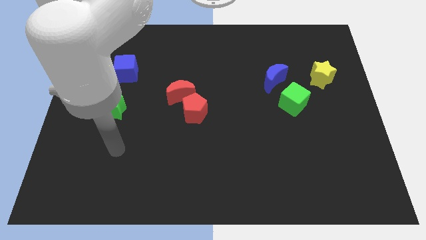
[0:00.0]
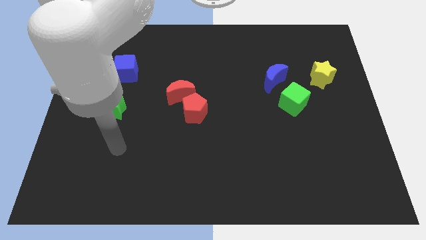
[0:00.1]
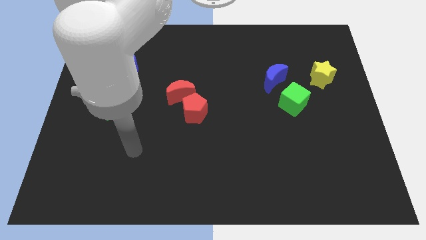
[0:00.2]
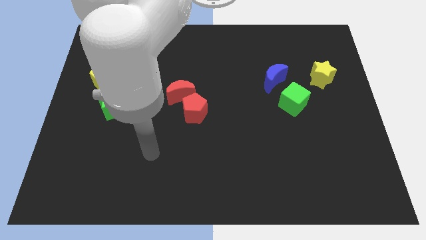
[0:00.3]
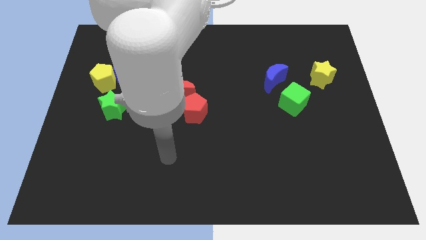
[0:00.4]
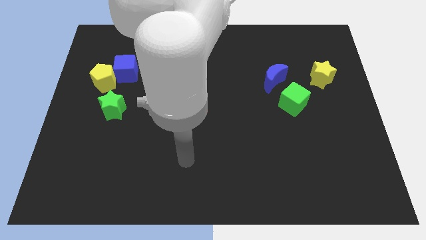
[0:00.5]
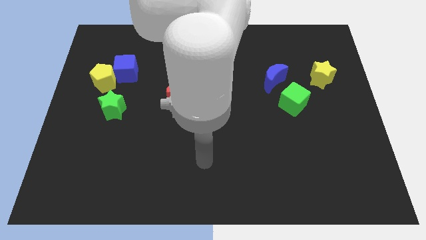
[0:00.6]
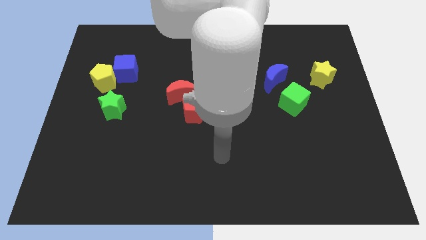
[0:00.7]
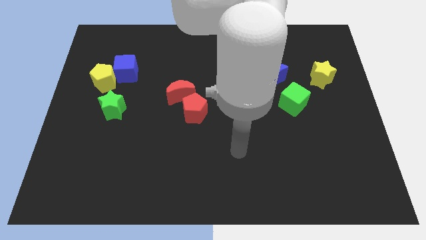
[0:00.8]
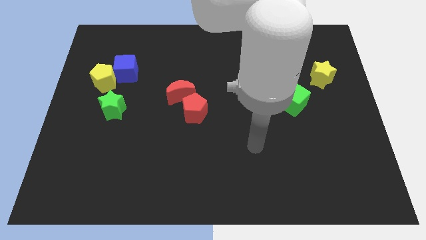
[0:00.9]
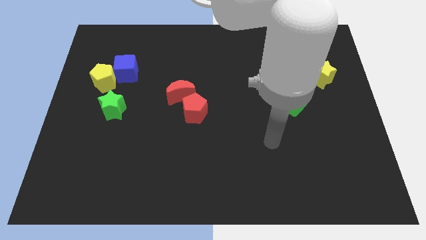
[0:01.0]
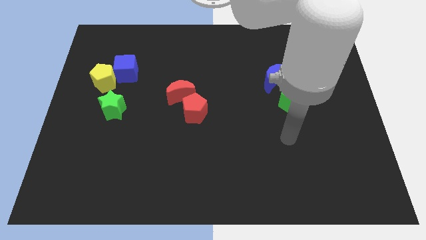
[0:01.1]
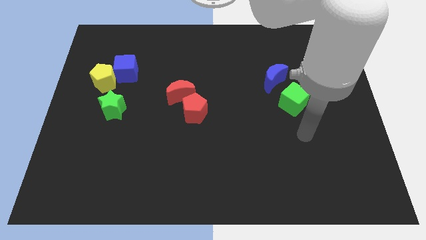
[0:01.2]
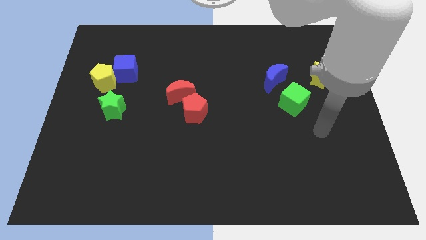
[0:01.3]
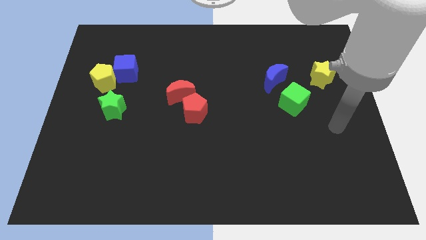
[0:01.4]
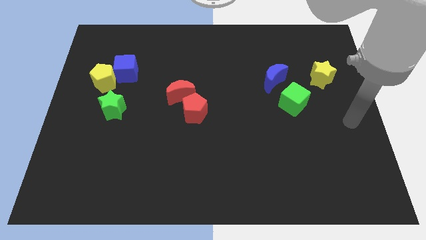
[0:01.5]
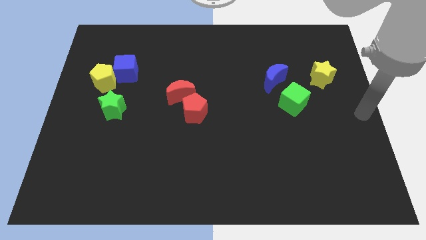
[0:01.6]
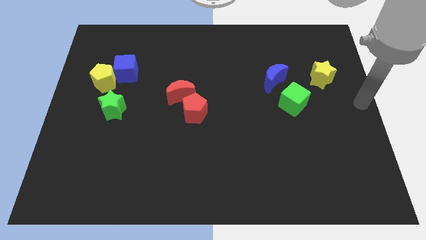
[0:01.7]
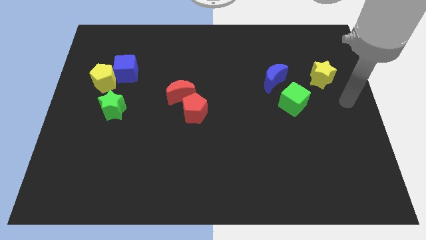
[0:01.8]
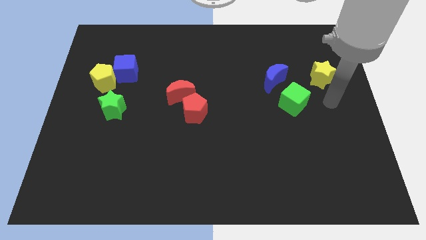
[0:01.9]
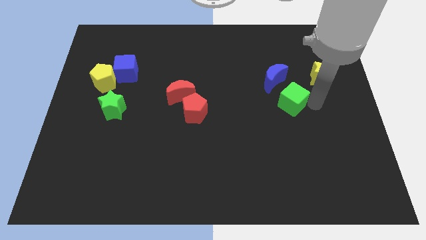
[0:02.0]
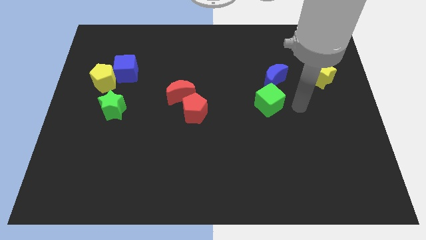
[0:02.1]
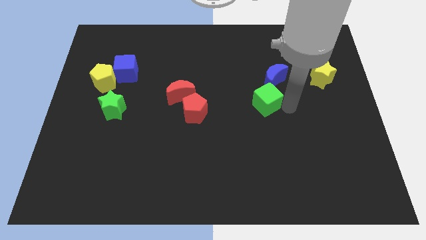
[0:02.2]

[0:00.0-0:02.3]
move your arm and slightly push the green cube below the blue moon

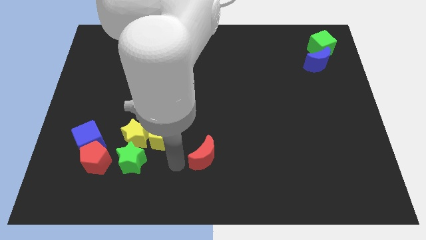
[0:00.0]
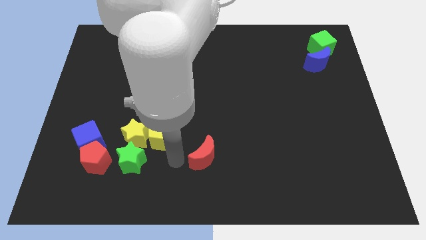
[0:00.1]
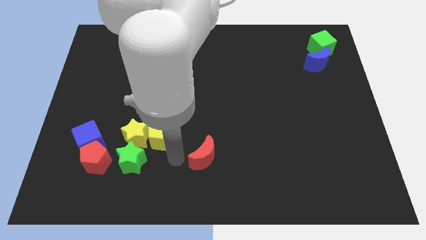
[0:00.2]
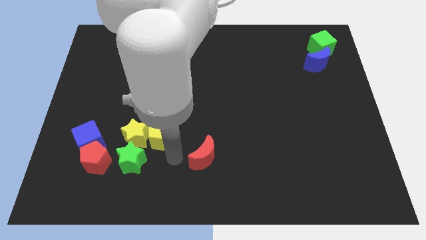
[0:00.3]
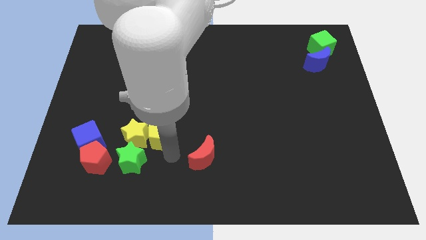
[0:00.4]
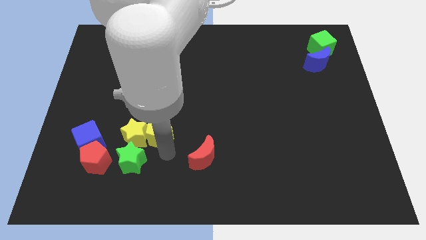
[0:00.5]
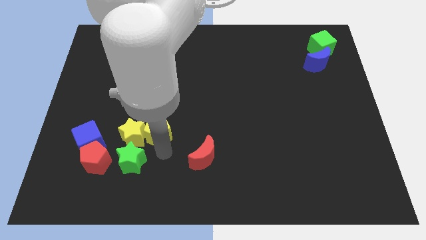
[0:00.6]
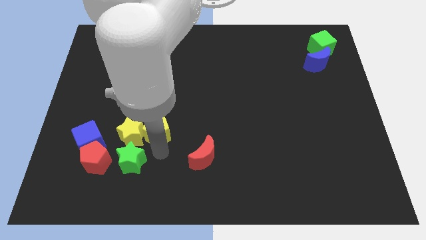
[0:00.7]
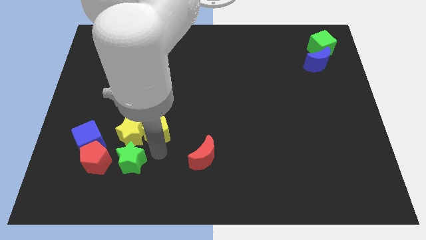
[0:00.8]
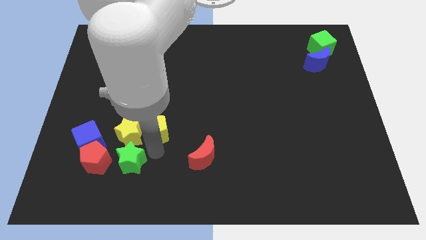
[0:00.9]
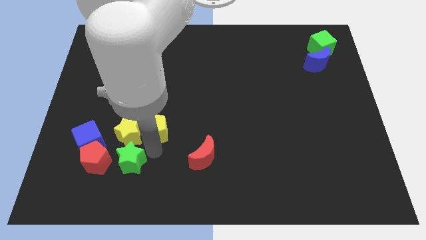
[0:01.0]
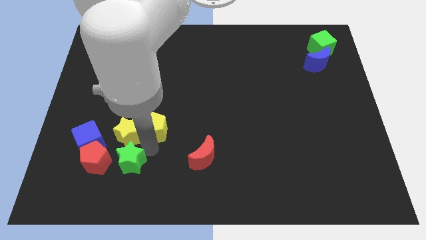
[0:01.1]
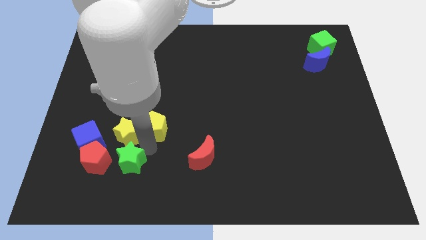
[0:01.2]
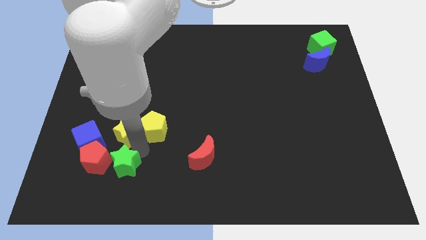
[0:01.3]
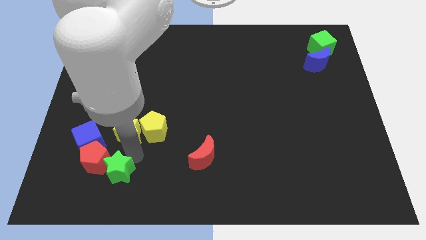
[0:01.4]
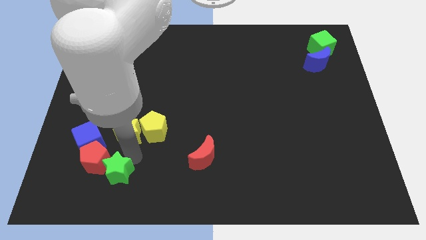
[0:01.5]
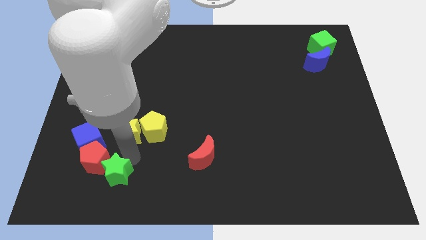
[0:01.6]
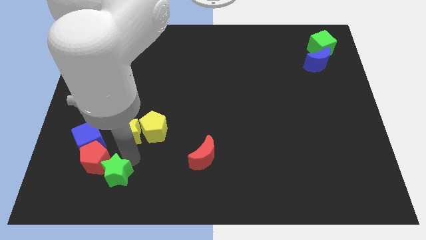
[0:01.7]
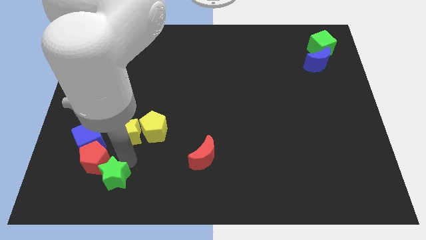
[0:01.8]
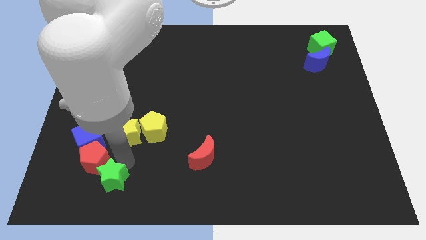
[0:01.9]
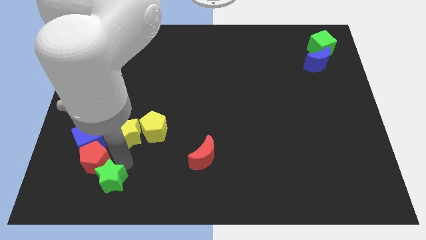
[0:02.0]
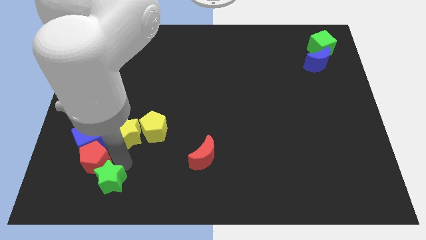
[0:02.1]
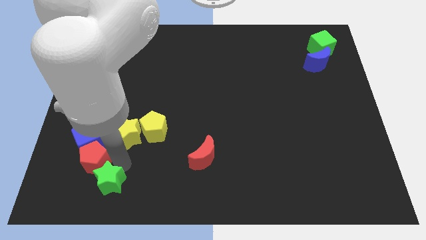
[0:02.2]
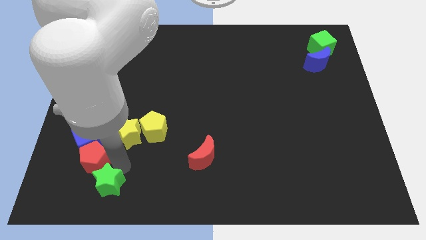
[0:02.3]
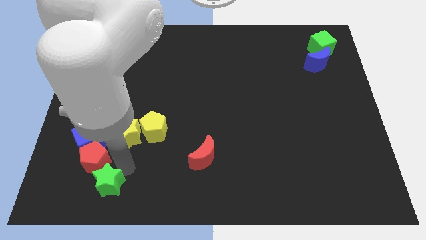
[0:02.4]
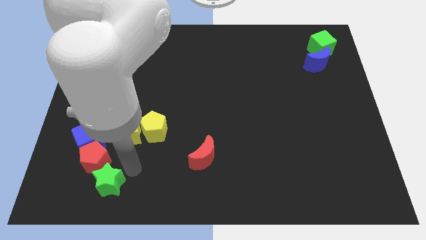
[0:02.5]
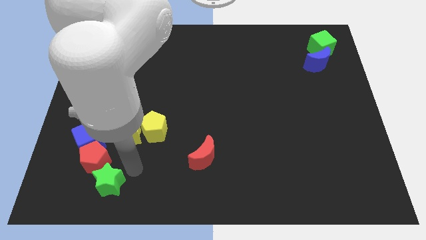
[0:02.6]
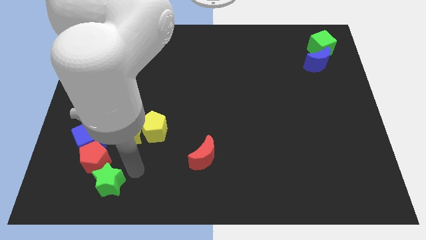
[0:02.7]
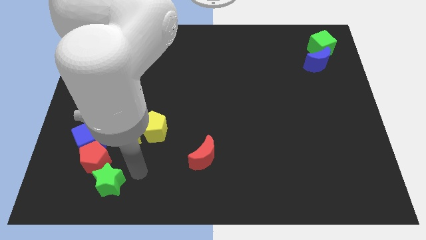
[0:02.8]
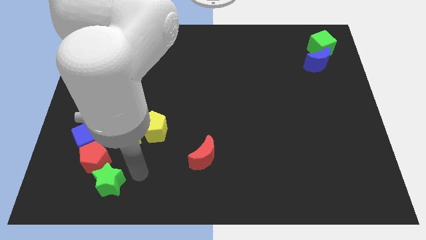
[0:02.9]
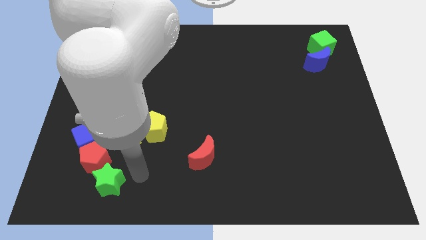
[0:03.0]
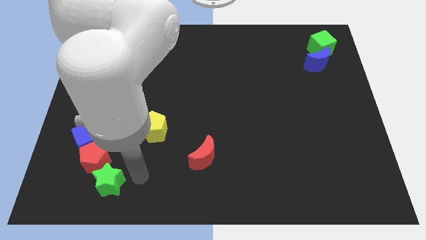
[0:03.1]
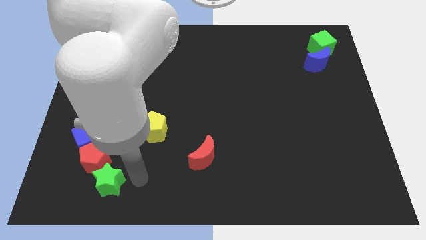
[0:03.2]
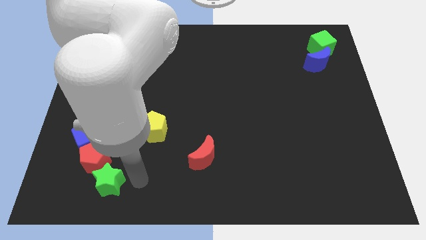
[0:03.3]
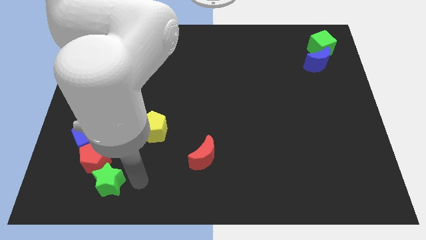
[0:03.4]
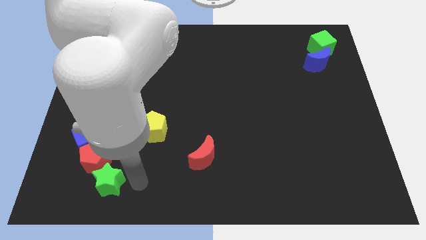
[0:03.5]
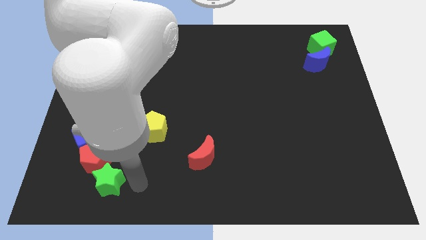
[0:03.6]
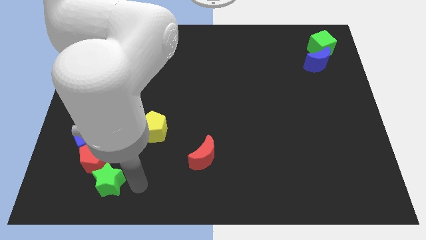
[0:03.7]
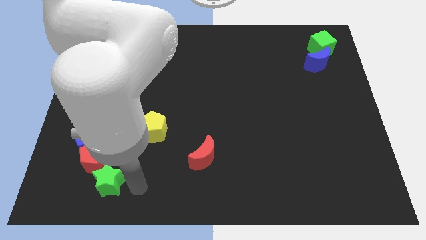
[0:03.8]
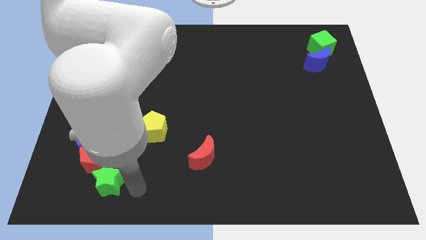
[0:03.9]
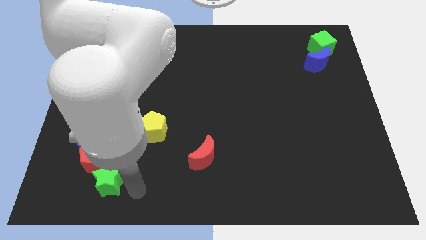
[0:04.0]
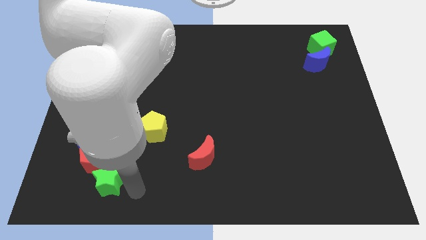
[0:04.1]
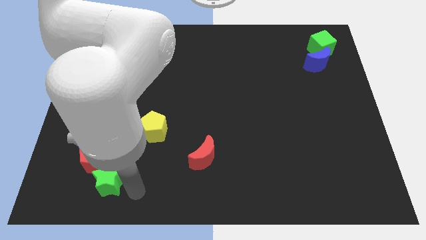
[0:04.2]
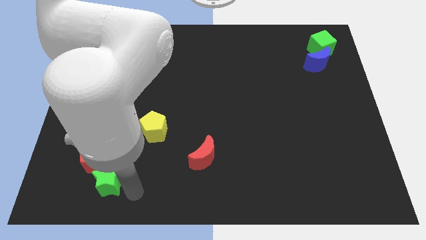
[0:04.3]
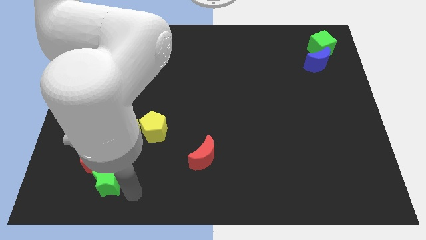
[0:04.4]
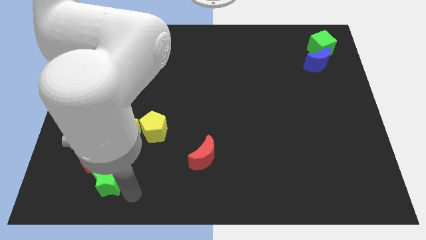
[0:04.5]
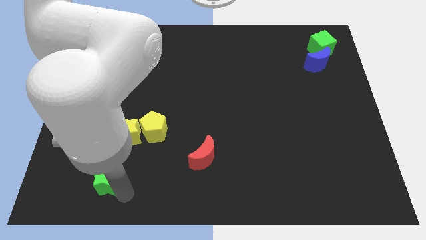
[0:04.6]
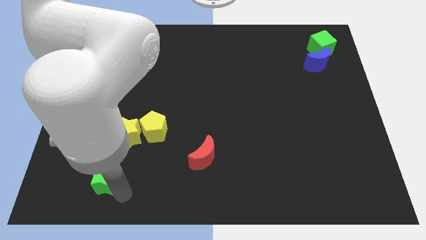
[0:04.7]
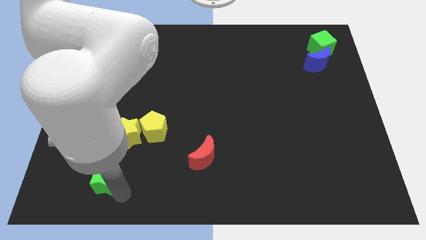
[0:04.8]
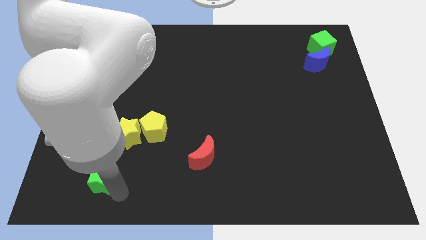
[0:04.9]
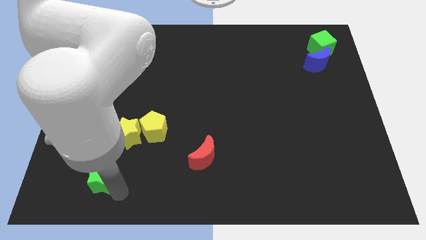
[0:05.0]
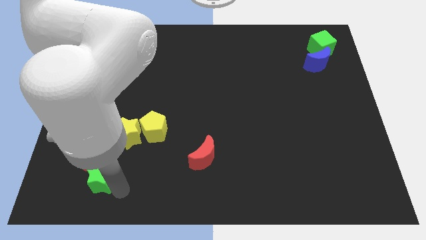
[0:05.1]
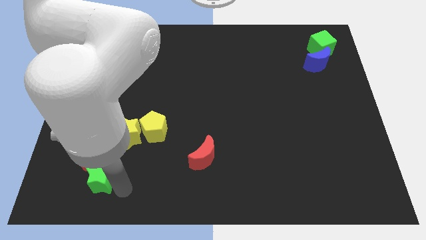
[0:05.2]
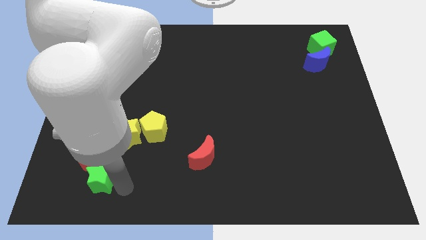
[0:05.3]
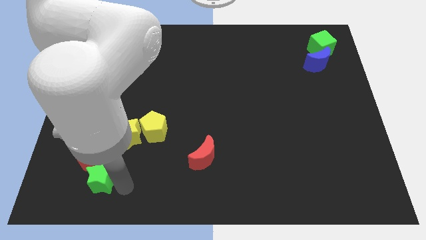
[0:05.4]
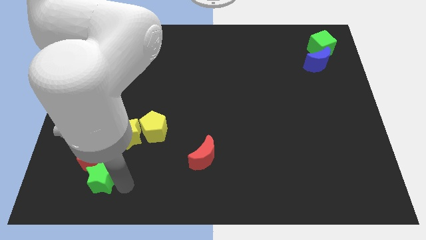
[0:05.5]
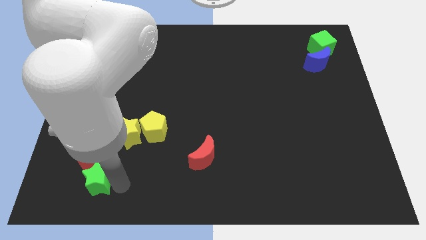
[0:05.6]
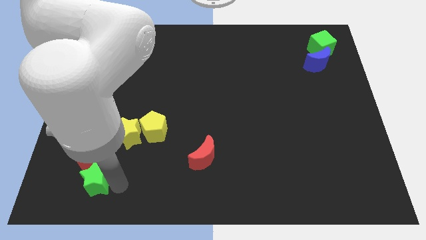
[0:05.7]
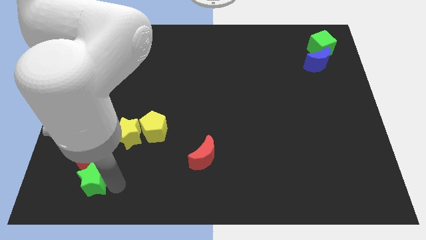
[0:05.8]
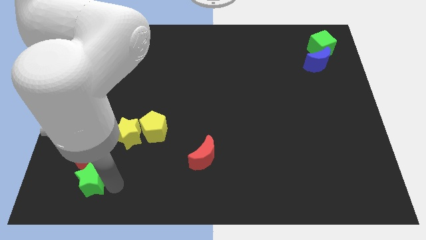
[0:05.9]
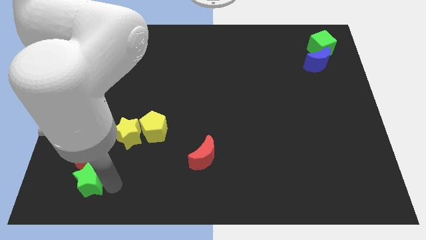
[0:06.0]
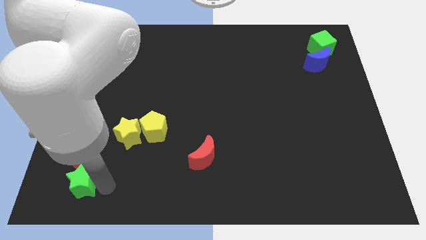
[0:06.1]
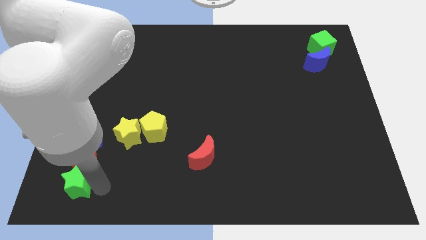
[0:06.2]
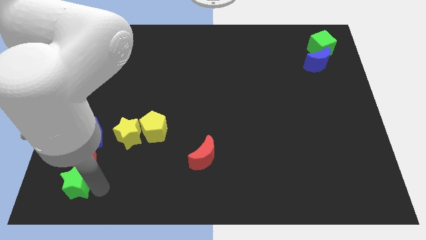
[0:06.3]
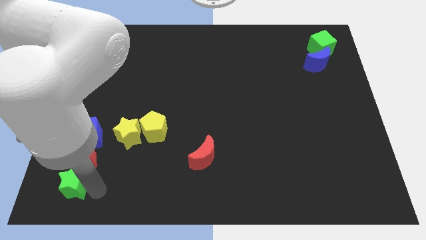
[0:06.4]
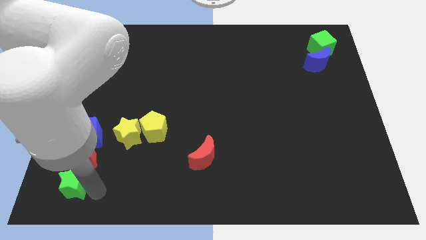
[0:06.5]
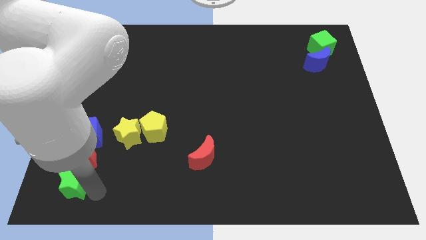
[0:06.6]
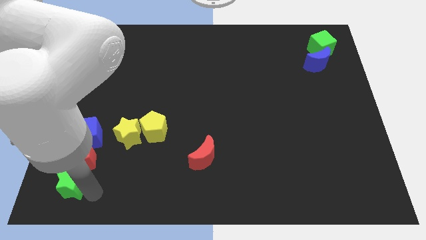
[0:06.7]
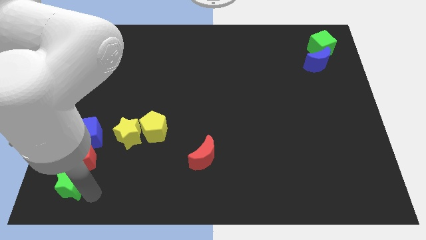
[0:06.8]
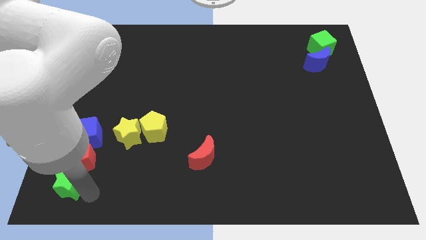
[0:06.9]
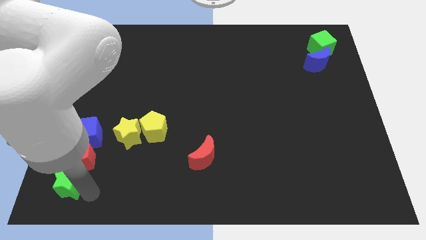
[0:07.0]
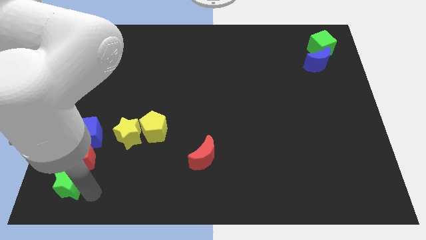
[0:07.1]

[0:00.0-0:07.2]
move the green star below the red pentagon
